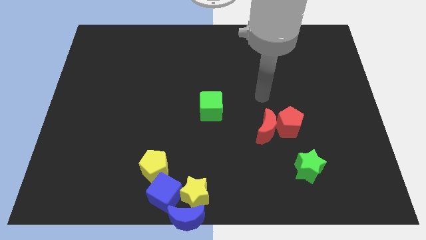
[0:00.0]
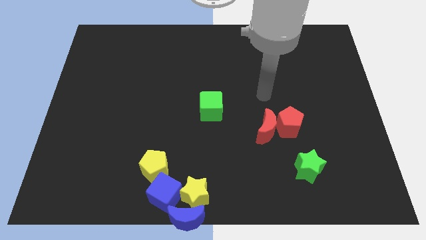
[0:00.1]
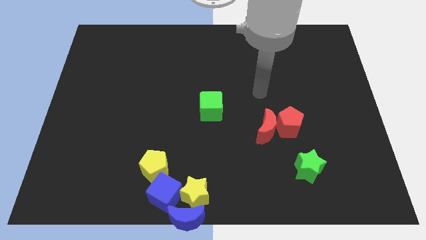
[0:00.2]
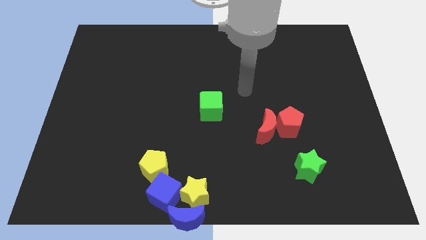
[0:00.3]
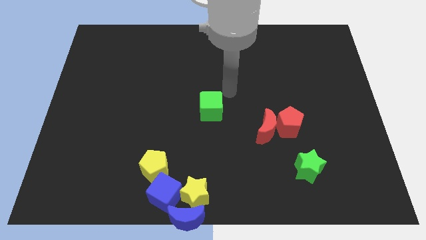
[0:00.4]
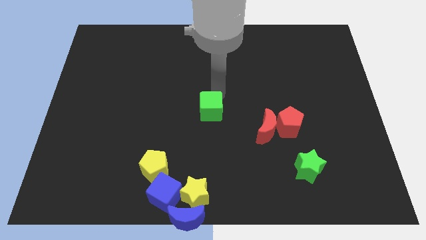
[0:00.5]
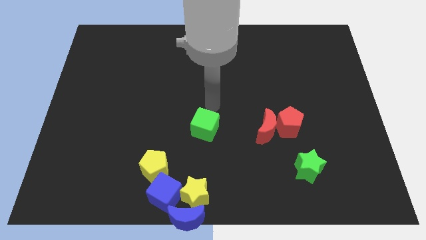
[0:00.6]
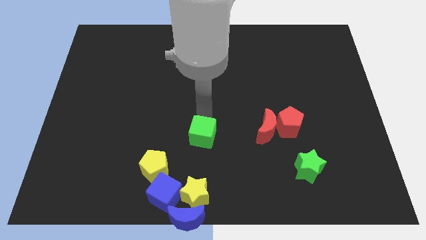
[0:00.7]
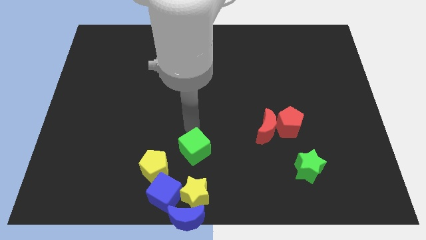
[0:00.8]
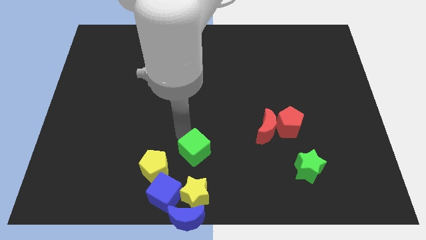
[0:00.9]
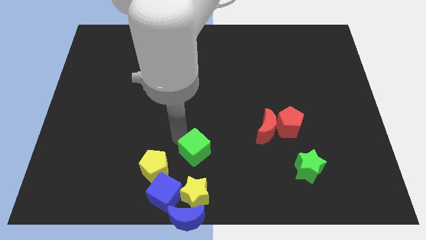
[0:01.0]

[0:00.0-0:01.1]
slightly move the green cube down

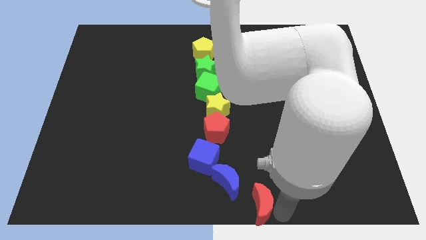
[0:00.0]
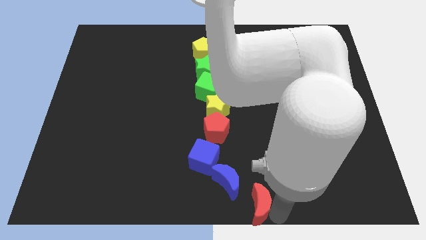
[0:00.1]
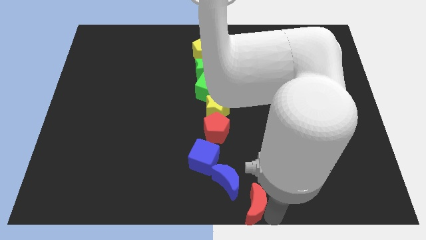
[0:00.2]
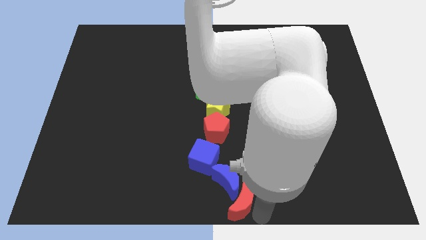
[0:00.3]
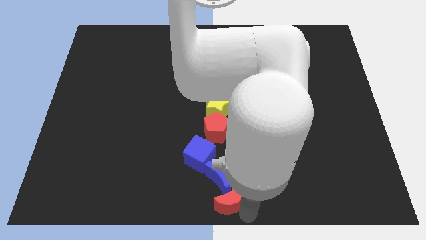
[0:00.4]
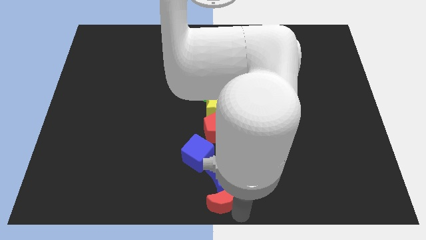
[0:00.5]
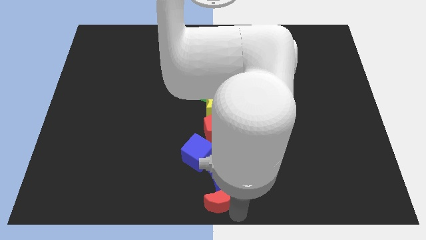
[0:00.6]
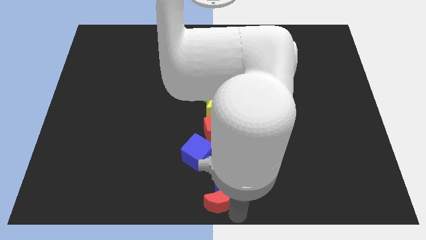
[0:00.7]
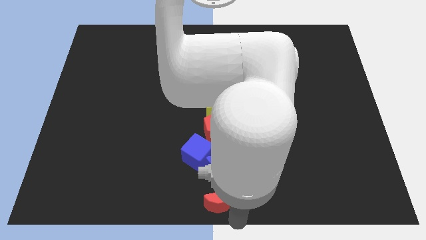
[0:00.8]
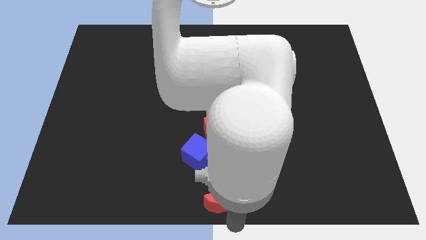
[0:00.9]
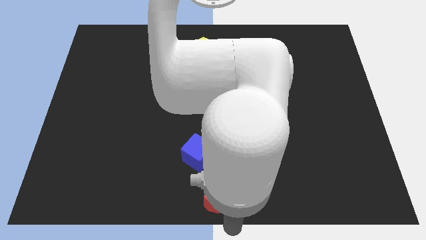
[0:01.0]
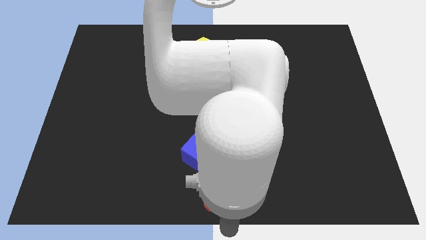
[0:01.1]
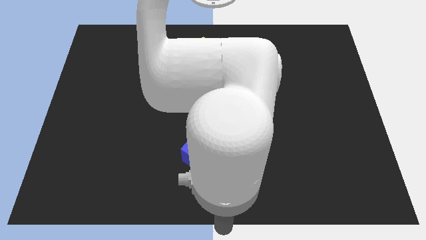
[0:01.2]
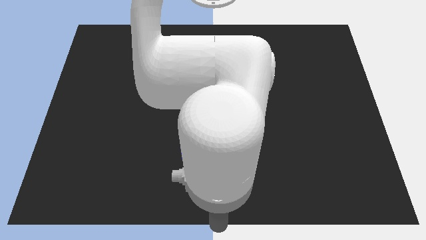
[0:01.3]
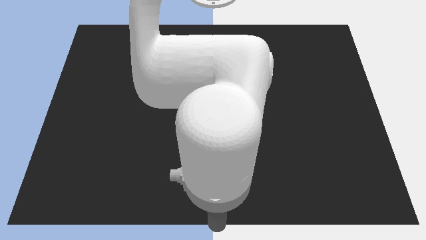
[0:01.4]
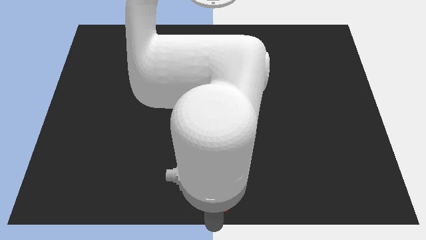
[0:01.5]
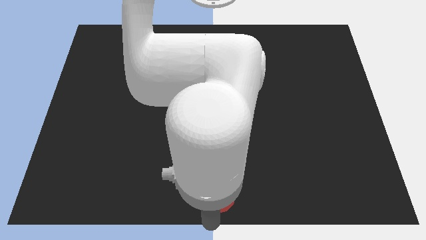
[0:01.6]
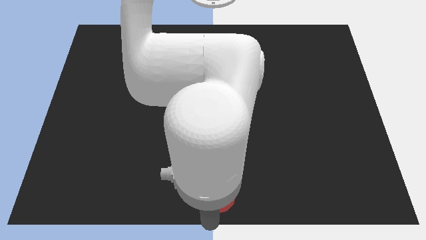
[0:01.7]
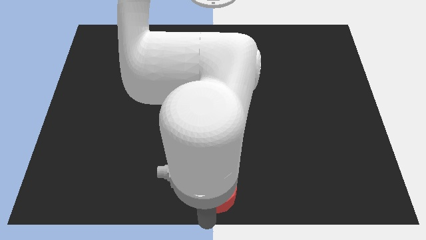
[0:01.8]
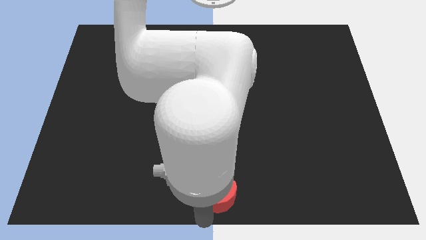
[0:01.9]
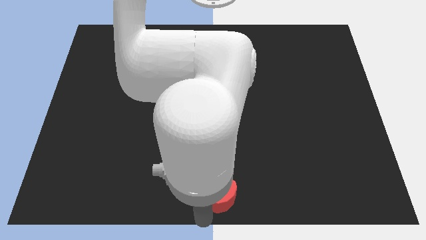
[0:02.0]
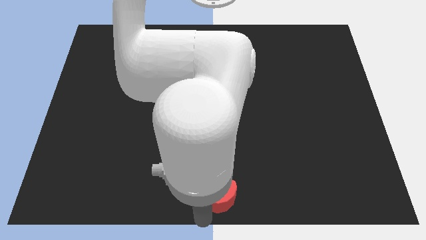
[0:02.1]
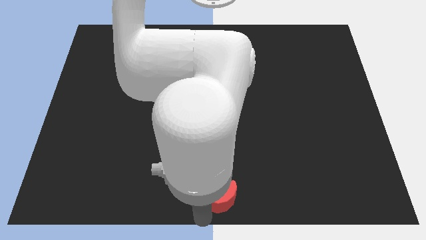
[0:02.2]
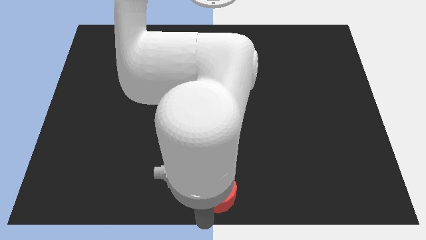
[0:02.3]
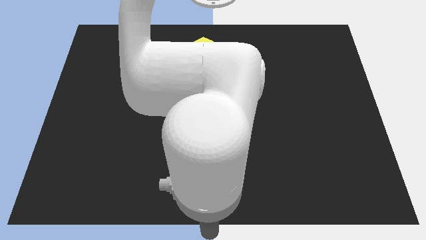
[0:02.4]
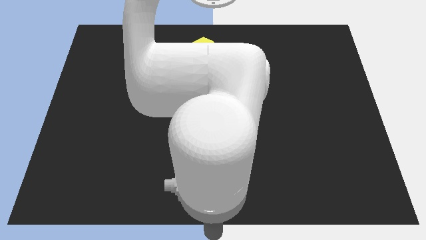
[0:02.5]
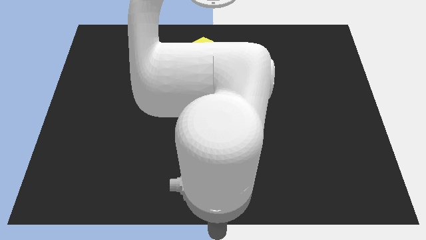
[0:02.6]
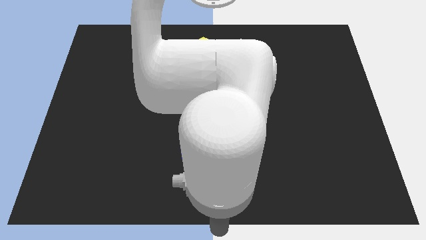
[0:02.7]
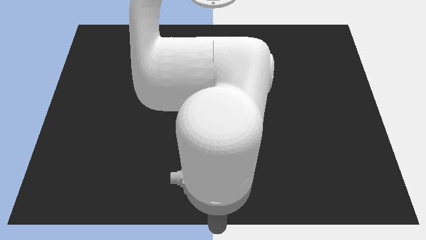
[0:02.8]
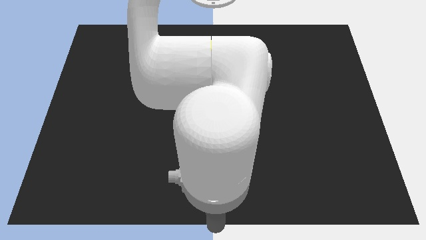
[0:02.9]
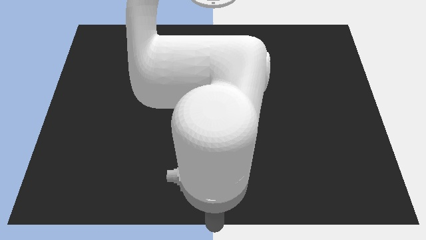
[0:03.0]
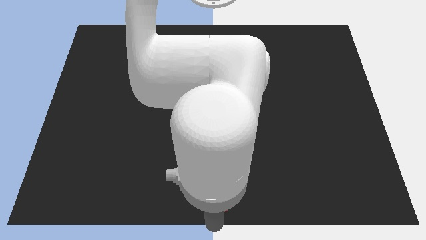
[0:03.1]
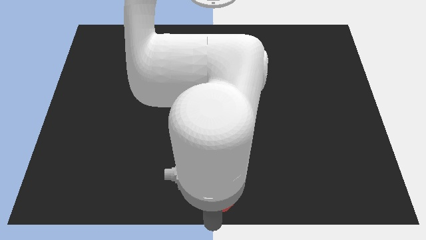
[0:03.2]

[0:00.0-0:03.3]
place the red crescent to the bottom of the blue moon

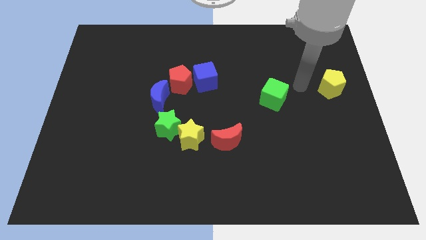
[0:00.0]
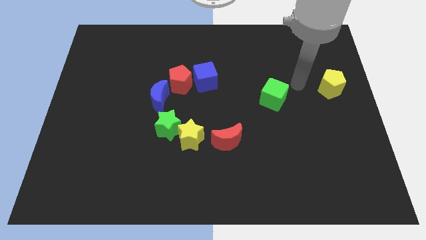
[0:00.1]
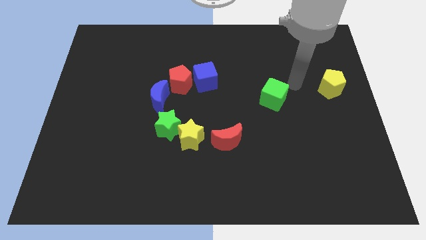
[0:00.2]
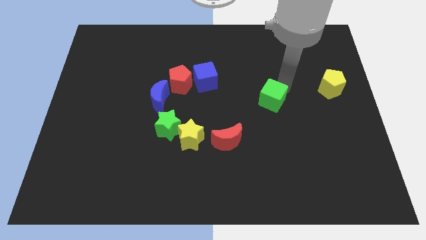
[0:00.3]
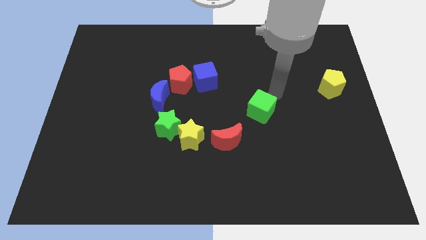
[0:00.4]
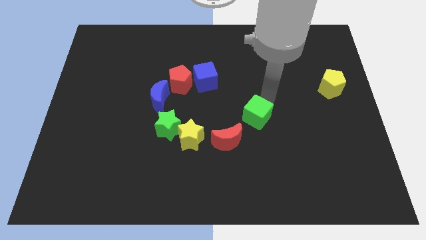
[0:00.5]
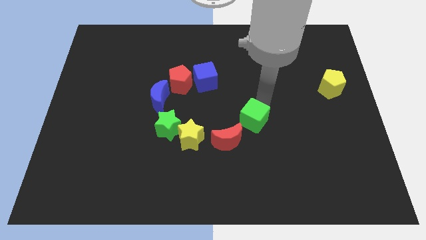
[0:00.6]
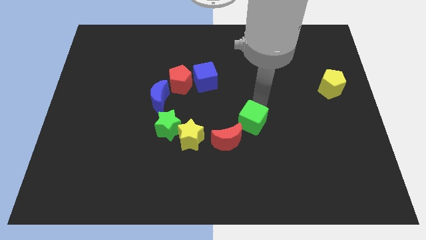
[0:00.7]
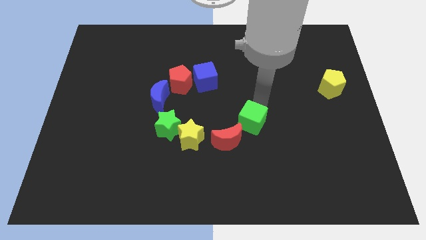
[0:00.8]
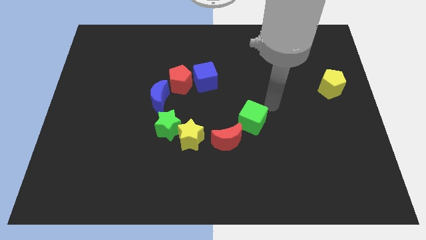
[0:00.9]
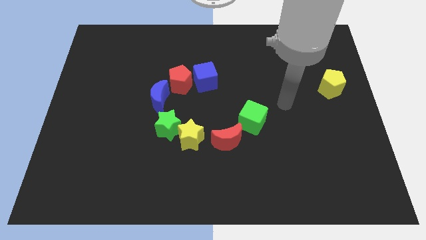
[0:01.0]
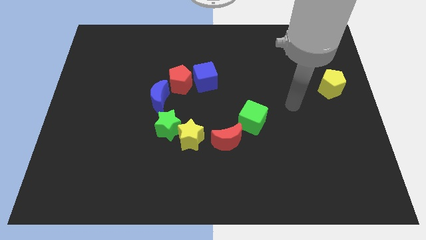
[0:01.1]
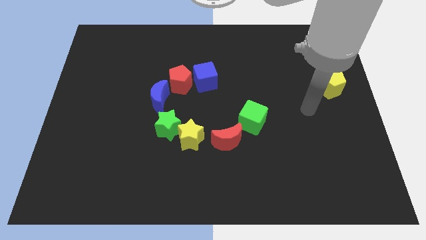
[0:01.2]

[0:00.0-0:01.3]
push the green cube to the top right of the red crescent

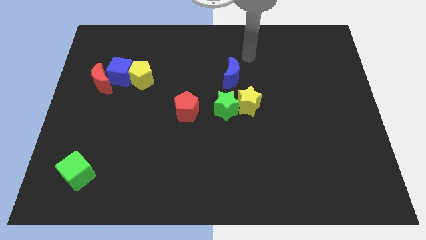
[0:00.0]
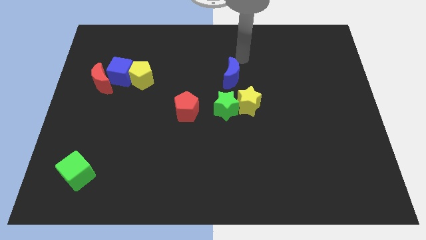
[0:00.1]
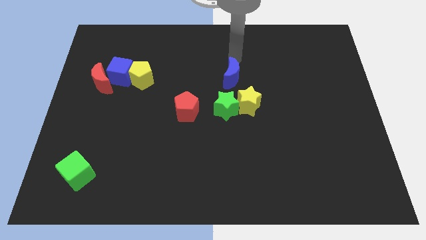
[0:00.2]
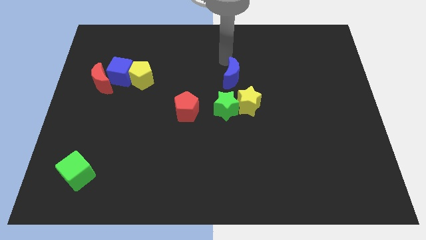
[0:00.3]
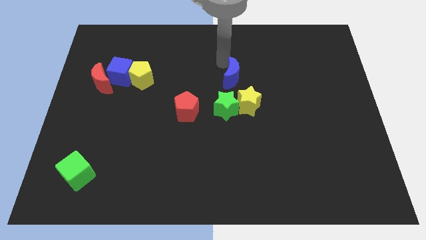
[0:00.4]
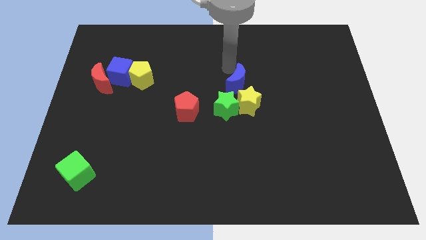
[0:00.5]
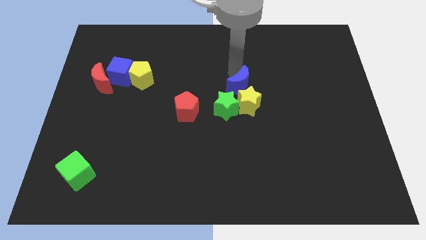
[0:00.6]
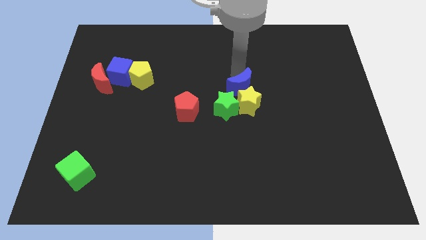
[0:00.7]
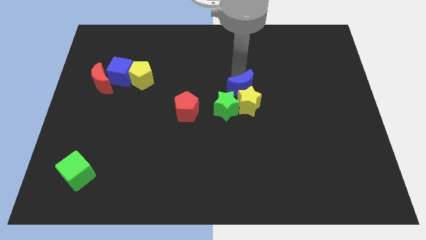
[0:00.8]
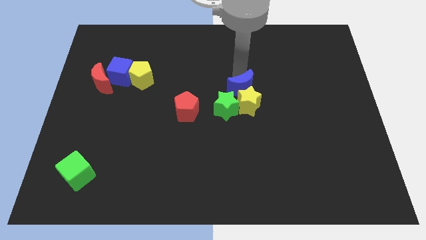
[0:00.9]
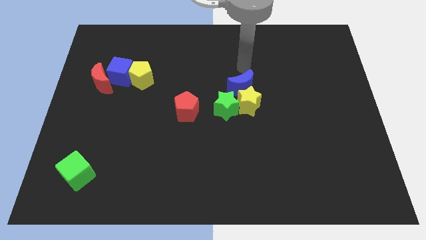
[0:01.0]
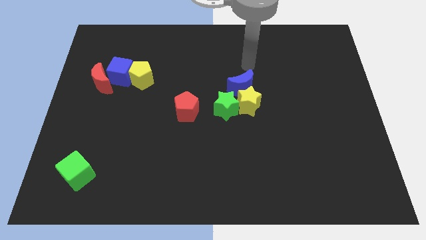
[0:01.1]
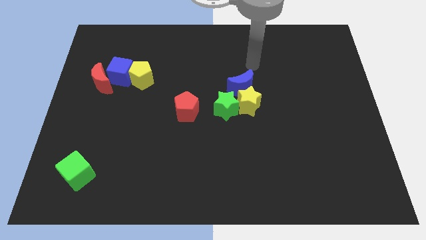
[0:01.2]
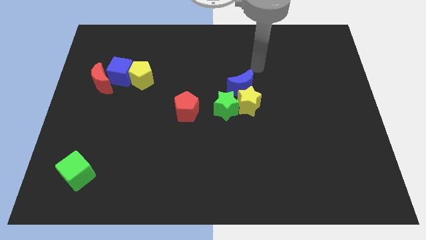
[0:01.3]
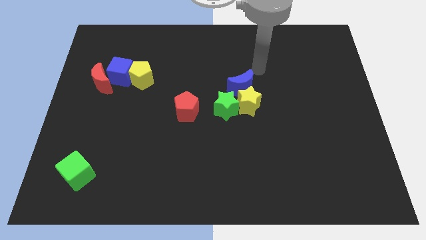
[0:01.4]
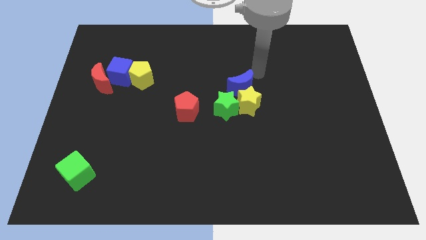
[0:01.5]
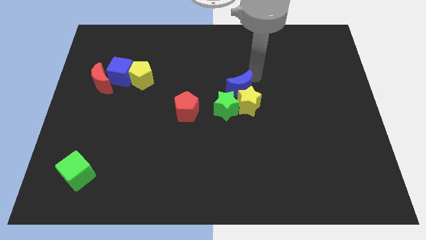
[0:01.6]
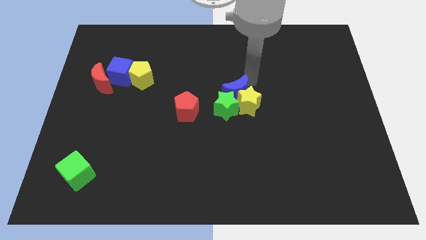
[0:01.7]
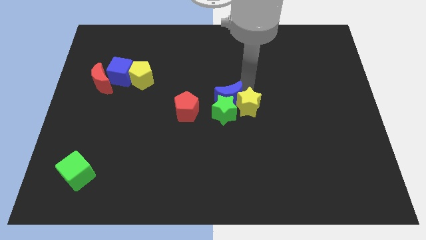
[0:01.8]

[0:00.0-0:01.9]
push the blue moon into the green and the yellow star

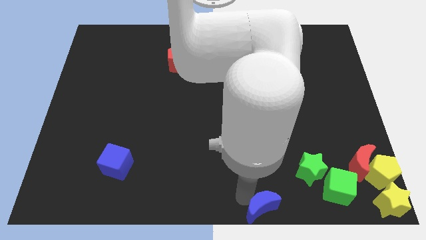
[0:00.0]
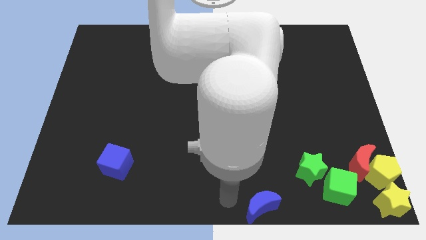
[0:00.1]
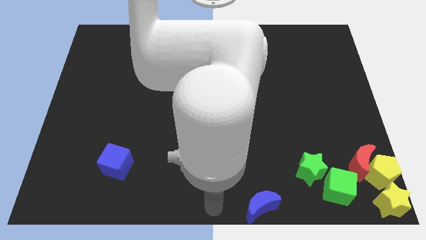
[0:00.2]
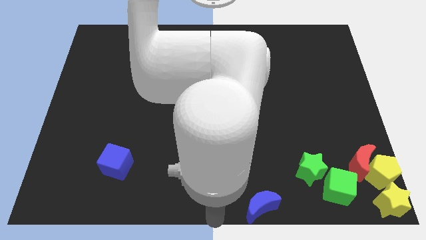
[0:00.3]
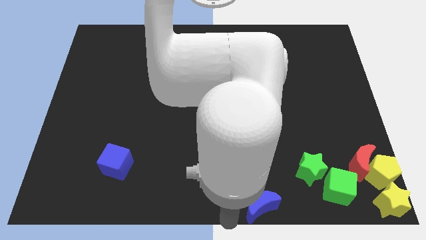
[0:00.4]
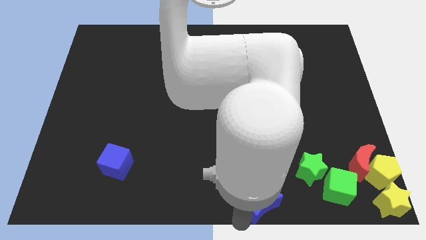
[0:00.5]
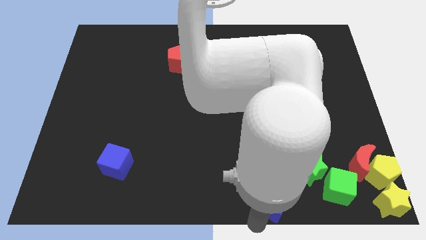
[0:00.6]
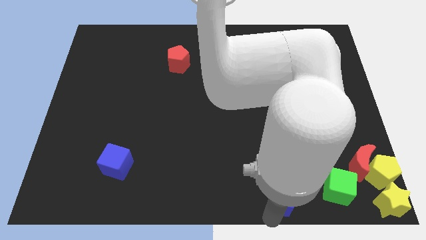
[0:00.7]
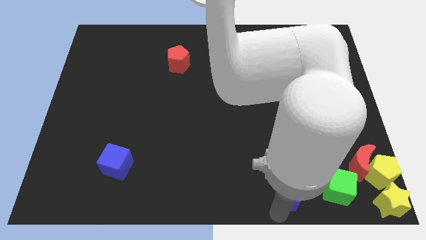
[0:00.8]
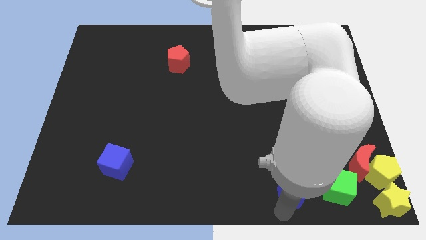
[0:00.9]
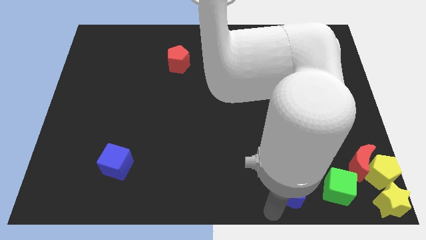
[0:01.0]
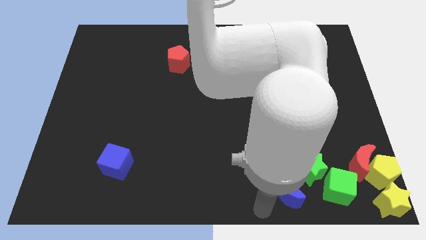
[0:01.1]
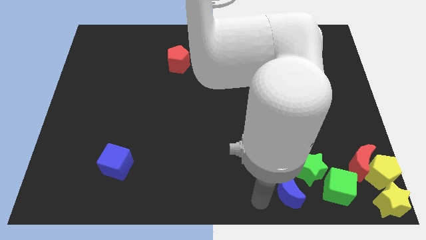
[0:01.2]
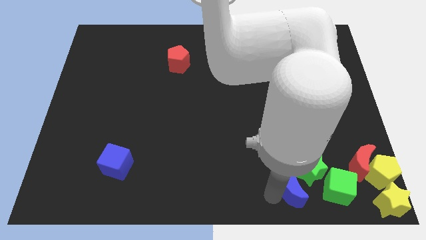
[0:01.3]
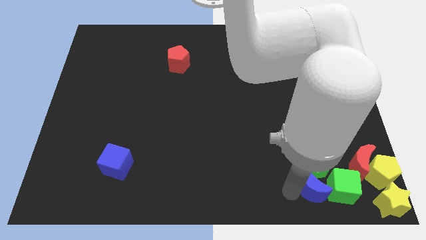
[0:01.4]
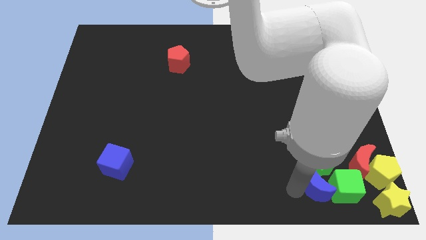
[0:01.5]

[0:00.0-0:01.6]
move the blue crescent into the green cube
